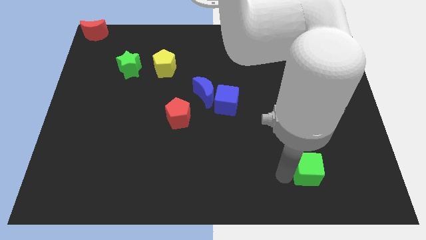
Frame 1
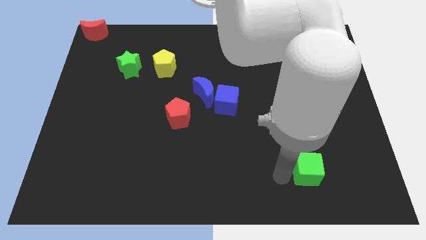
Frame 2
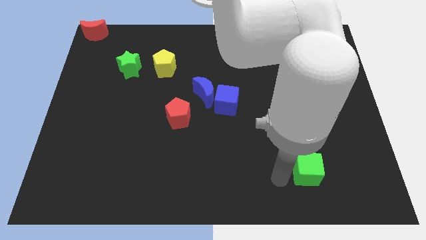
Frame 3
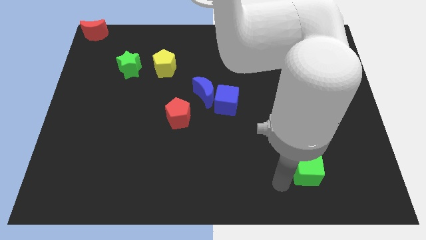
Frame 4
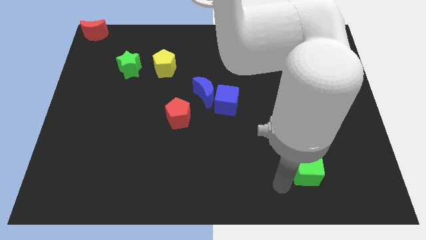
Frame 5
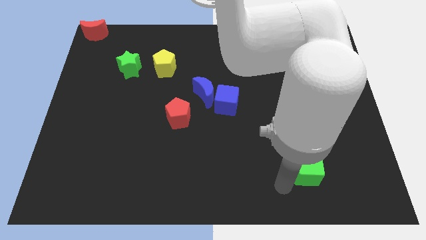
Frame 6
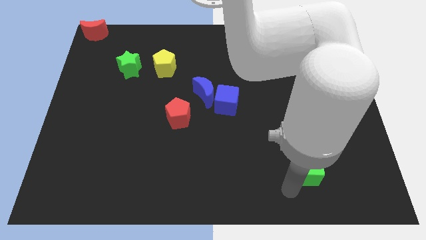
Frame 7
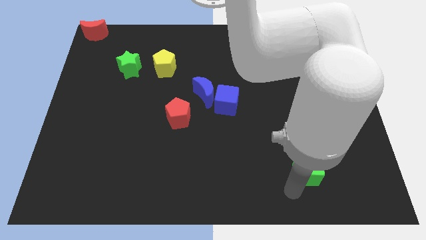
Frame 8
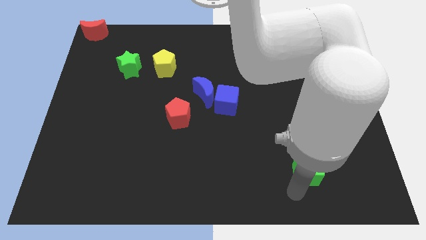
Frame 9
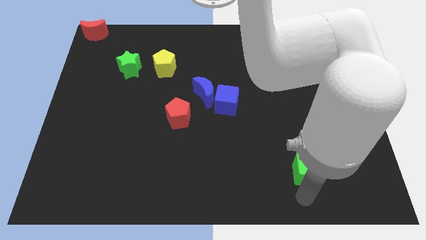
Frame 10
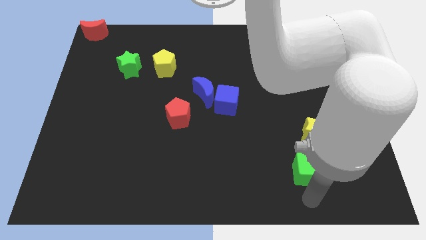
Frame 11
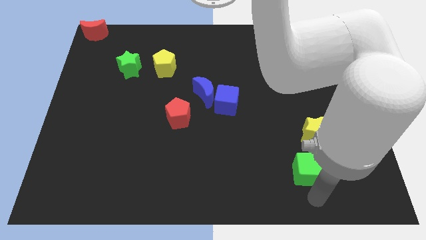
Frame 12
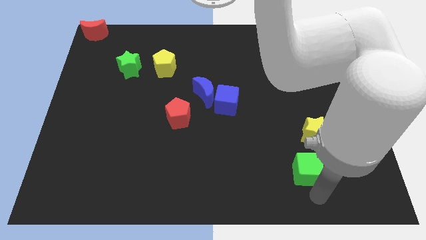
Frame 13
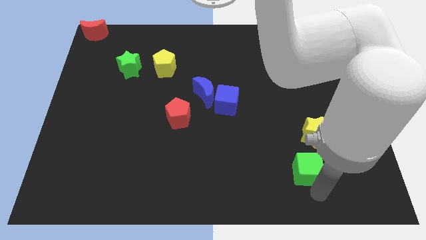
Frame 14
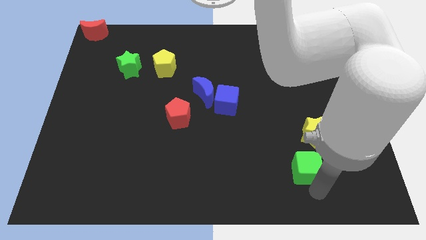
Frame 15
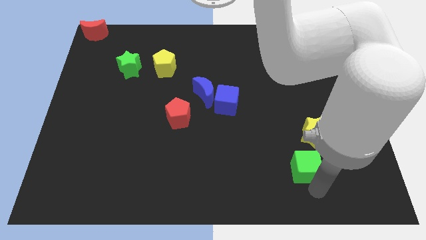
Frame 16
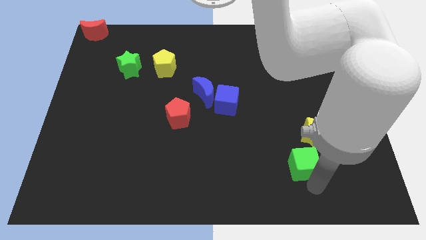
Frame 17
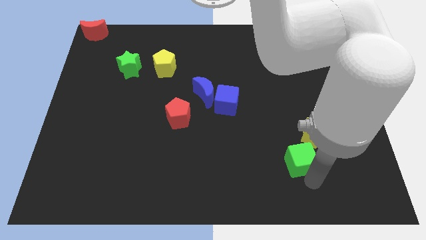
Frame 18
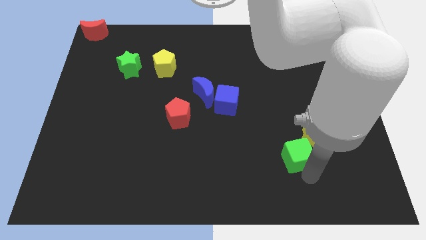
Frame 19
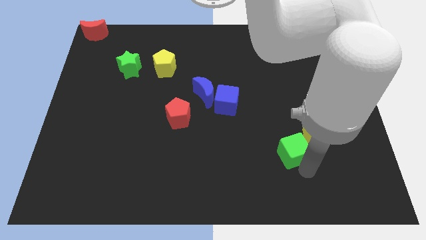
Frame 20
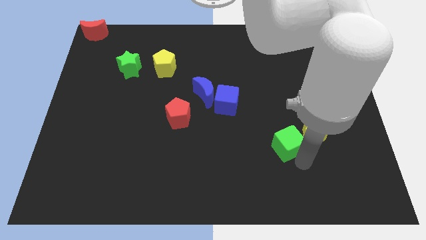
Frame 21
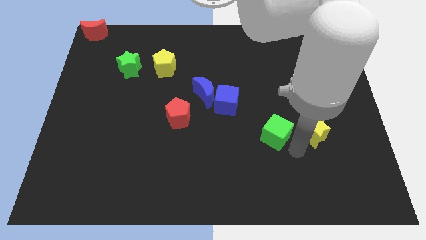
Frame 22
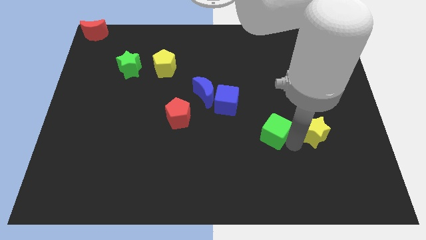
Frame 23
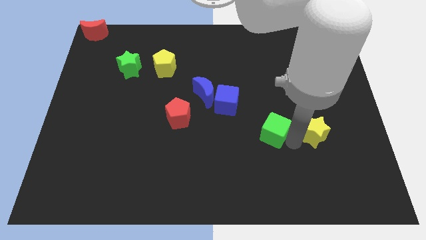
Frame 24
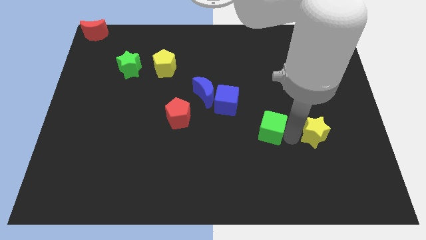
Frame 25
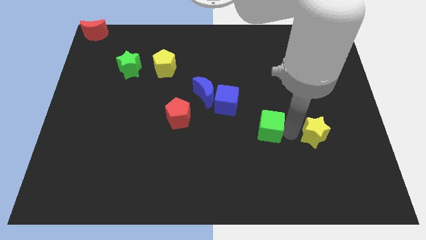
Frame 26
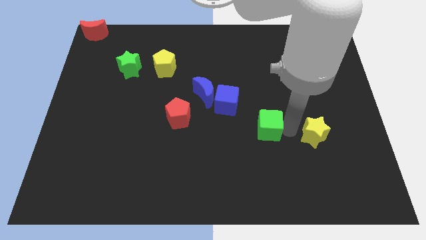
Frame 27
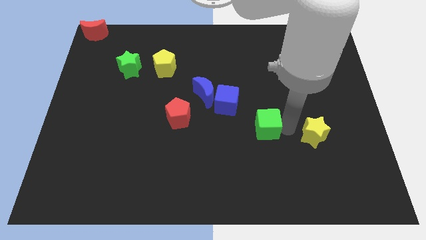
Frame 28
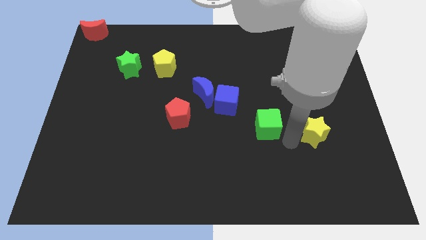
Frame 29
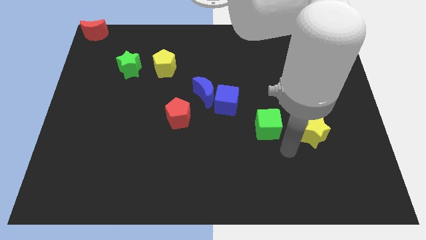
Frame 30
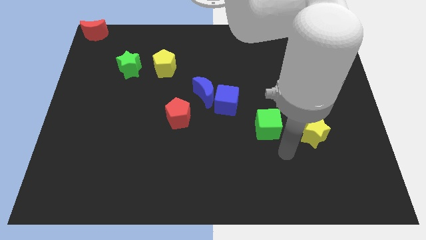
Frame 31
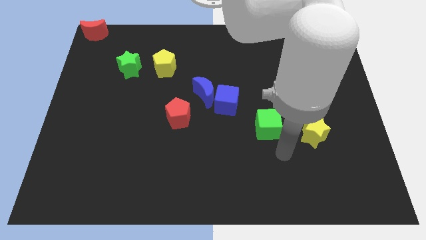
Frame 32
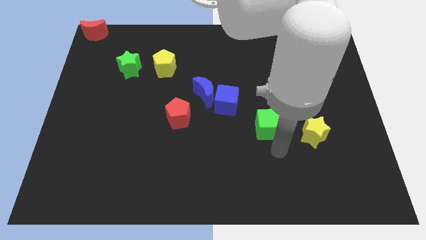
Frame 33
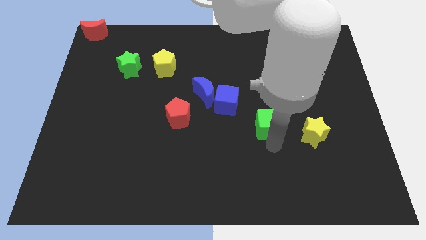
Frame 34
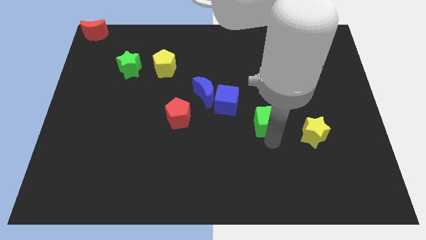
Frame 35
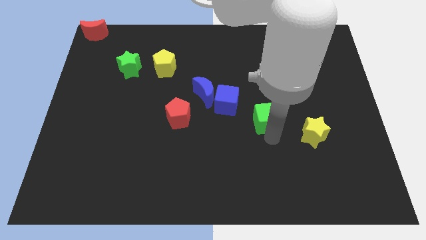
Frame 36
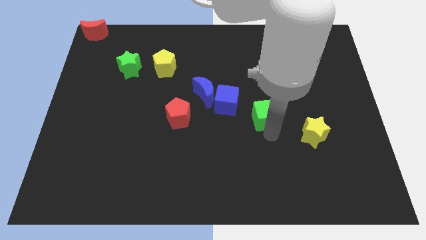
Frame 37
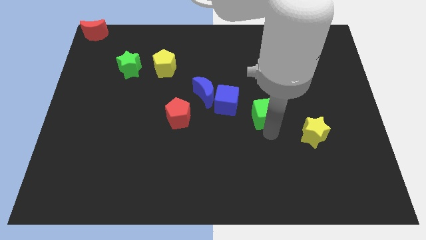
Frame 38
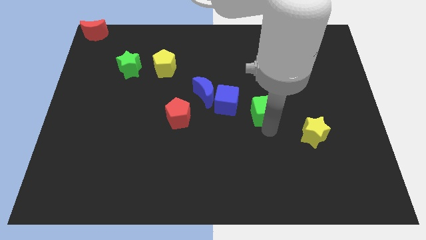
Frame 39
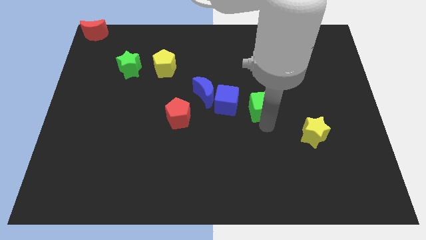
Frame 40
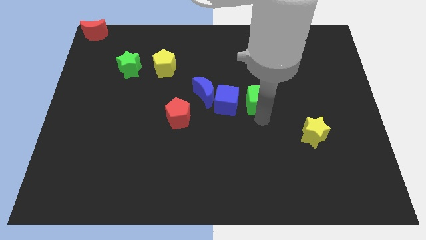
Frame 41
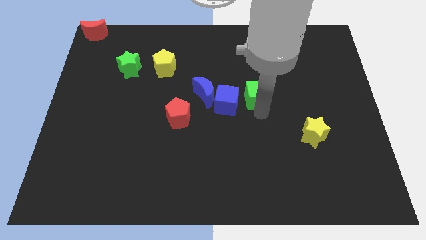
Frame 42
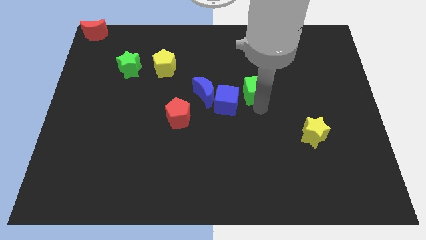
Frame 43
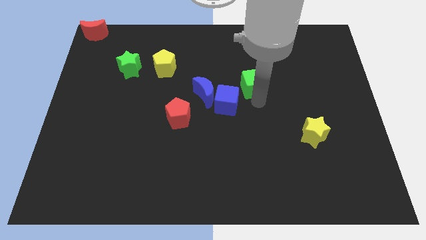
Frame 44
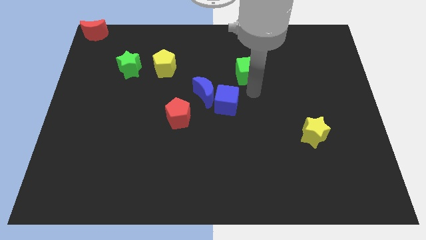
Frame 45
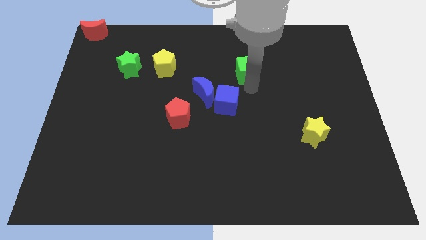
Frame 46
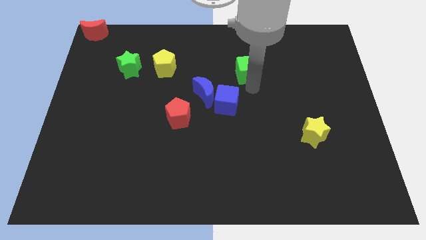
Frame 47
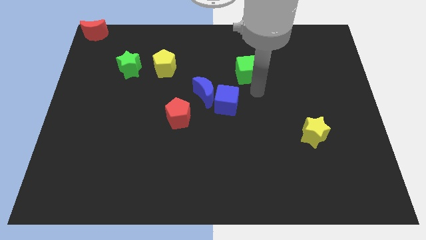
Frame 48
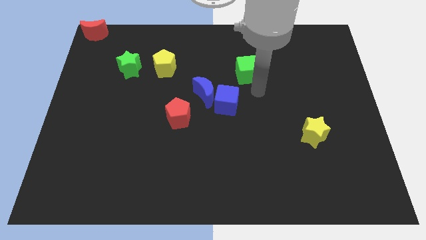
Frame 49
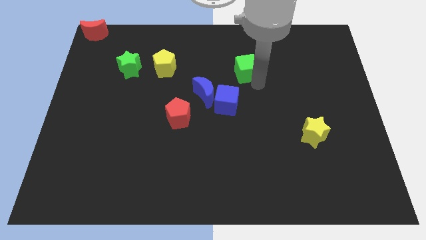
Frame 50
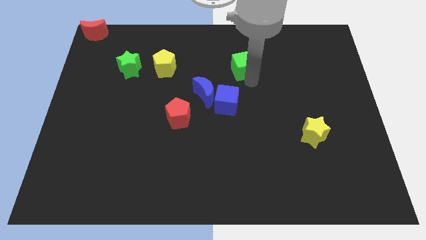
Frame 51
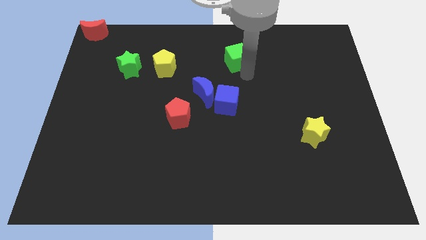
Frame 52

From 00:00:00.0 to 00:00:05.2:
push the green cube to the right of the yellow pentagon

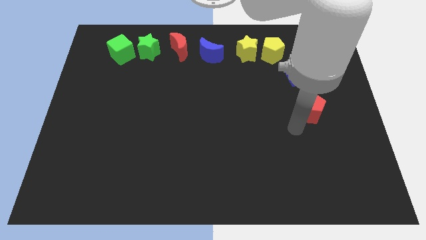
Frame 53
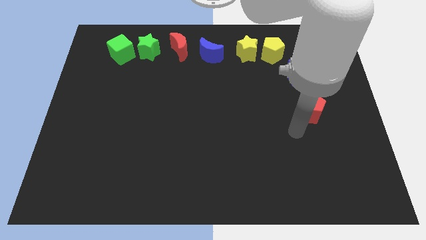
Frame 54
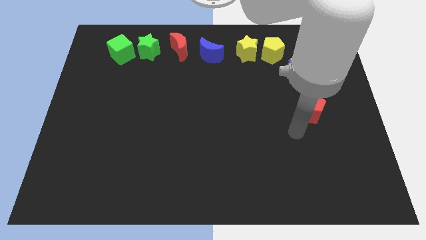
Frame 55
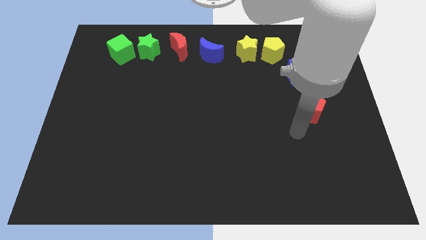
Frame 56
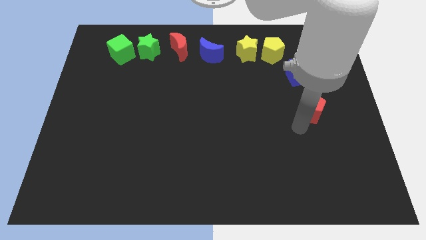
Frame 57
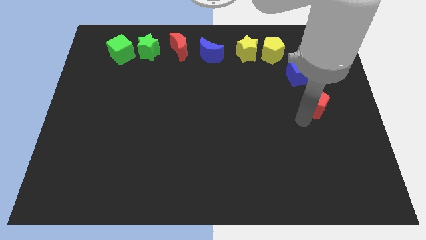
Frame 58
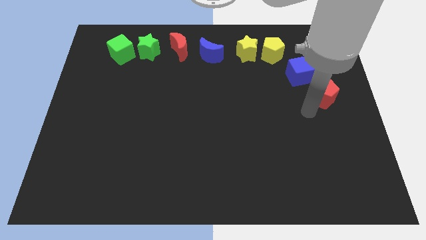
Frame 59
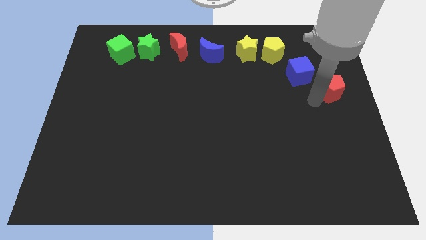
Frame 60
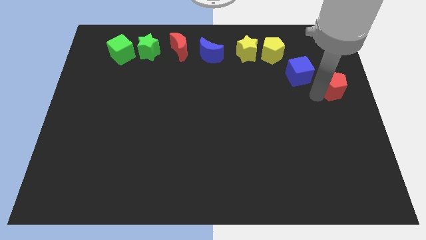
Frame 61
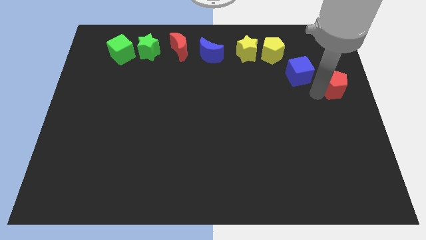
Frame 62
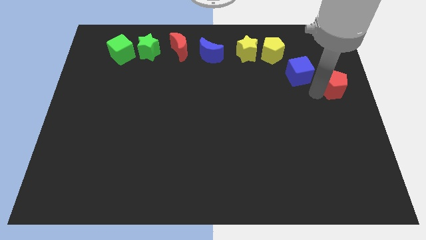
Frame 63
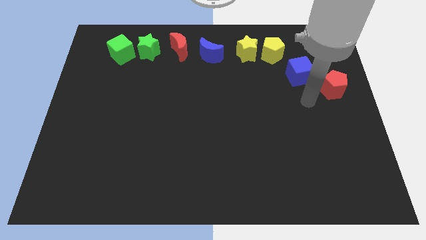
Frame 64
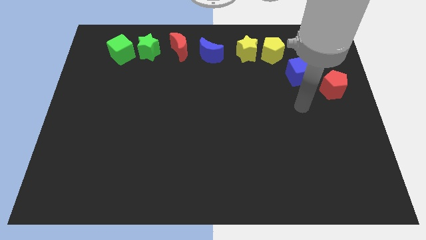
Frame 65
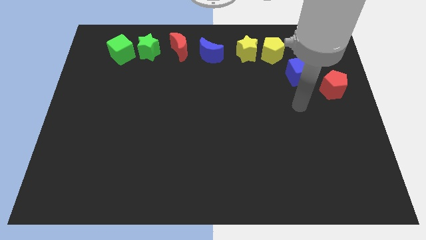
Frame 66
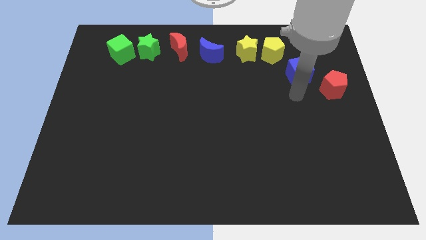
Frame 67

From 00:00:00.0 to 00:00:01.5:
move the red pentagon to the bottom right side of the blue cube

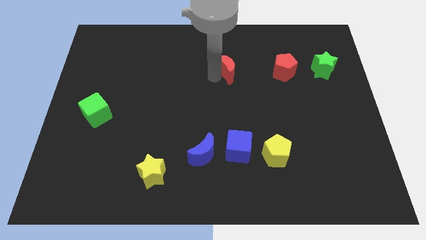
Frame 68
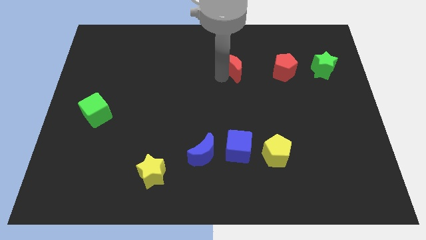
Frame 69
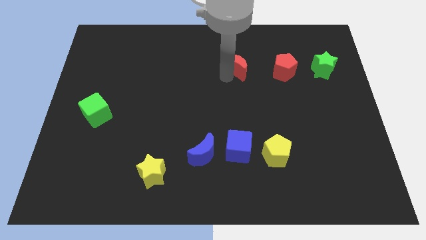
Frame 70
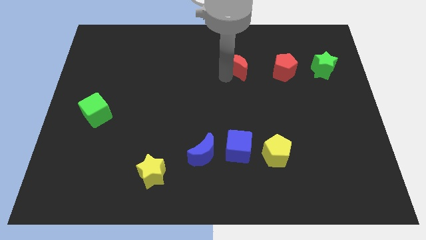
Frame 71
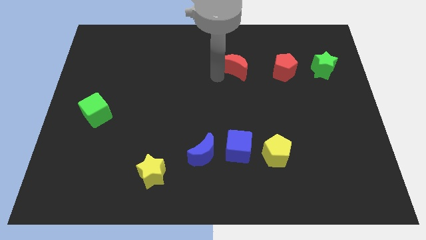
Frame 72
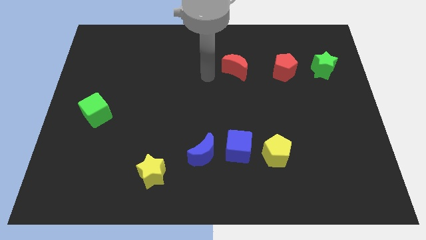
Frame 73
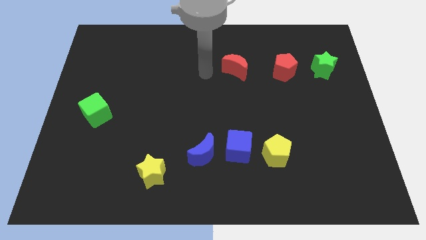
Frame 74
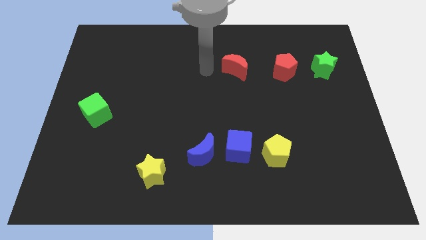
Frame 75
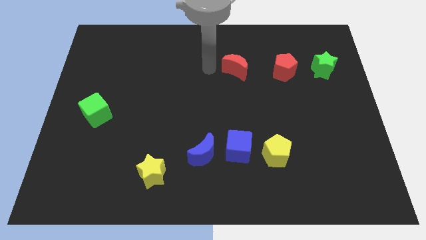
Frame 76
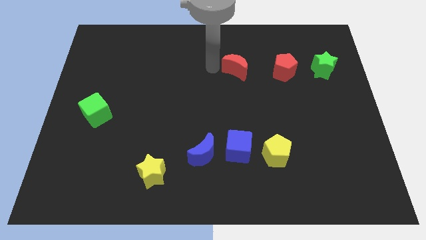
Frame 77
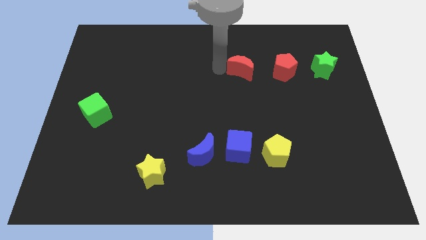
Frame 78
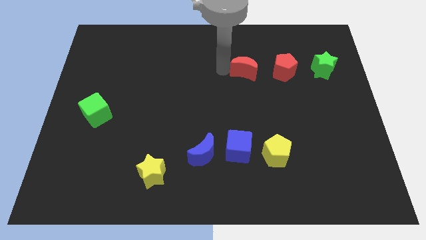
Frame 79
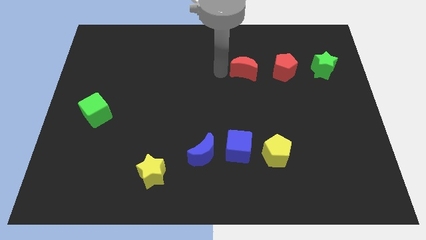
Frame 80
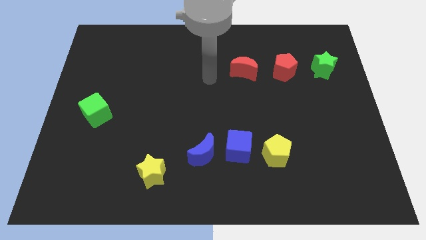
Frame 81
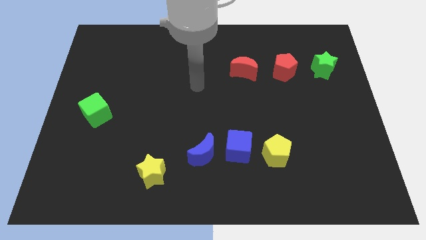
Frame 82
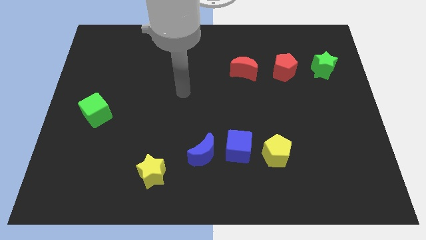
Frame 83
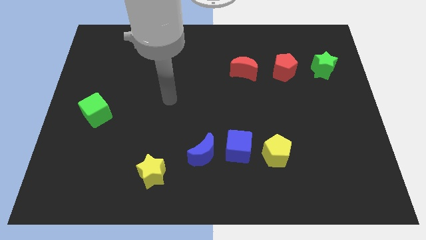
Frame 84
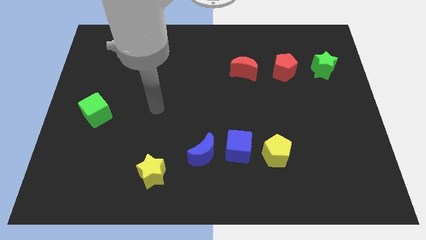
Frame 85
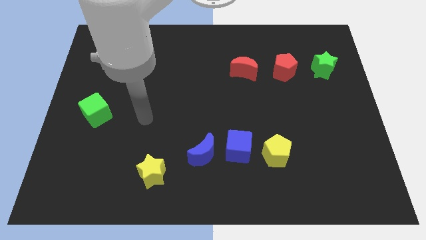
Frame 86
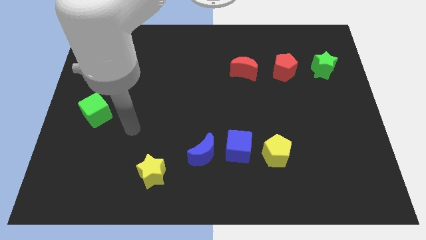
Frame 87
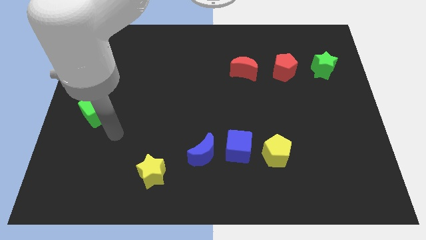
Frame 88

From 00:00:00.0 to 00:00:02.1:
move the red moon slightly to the right
